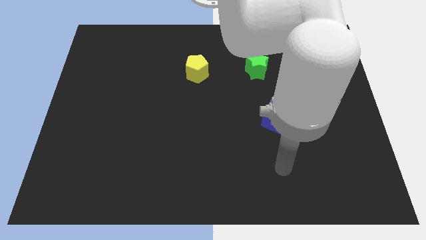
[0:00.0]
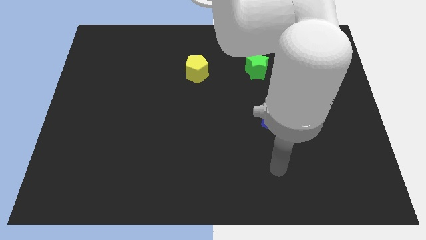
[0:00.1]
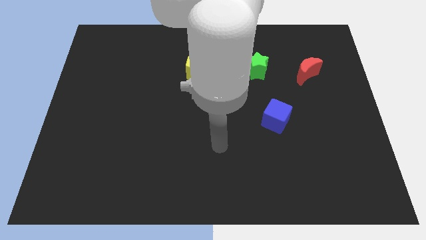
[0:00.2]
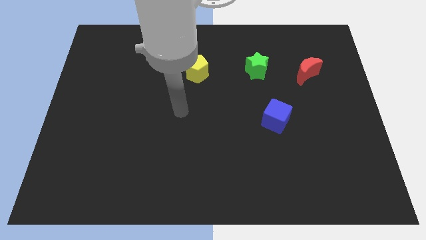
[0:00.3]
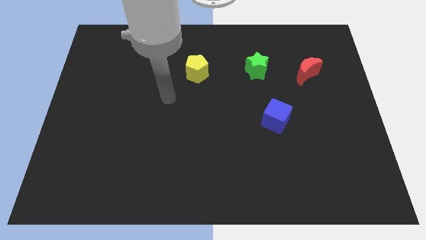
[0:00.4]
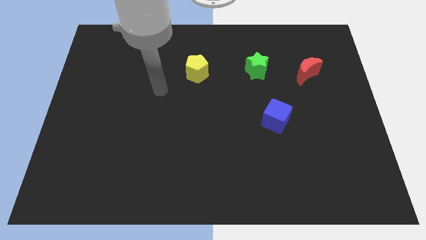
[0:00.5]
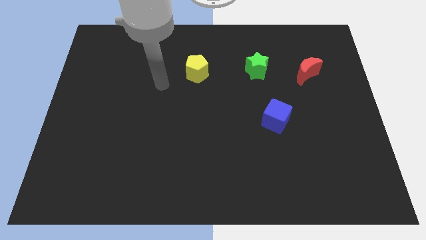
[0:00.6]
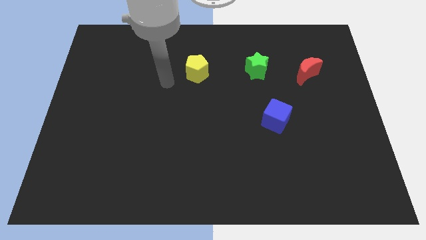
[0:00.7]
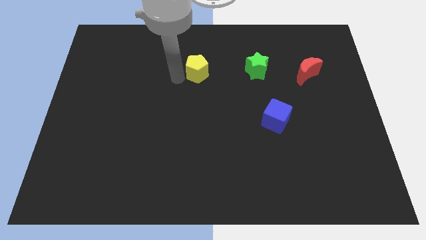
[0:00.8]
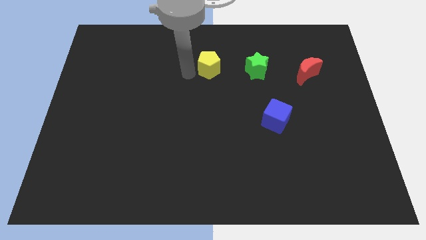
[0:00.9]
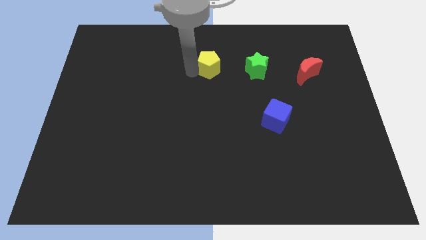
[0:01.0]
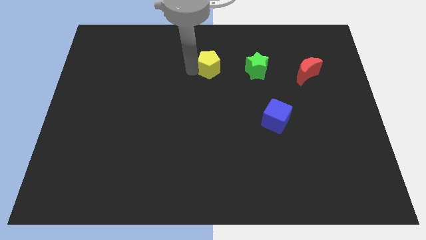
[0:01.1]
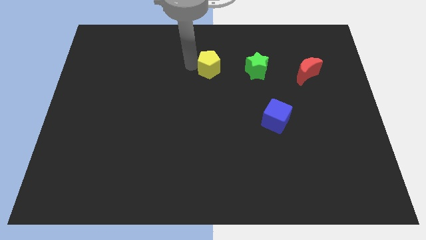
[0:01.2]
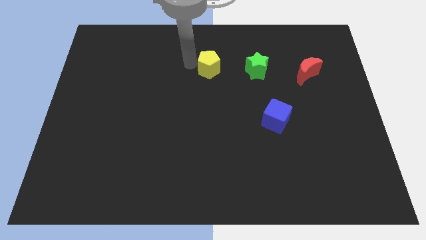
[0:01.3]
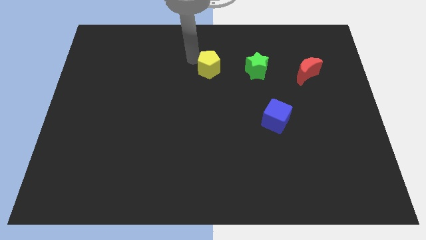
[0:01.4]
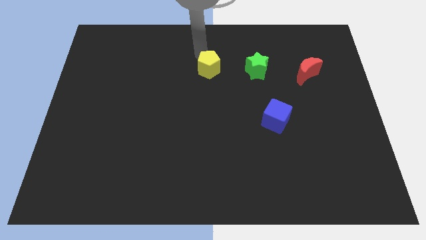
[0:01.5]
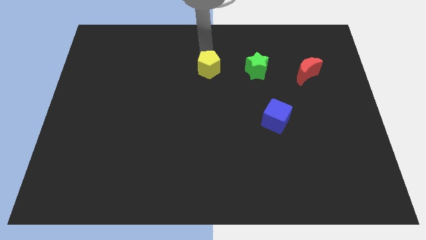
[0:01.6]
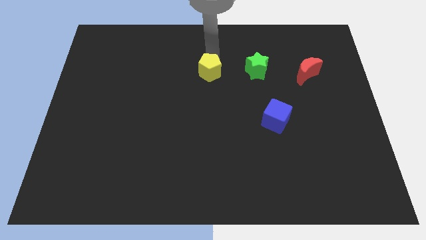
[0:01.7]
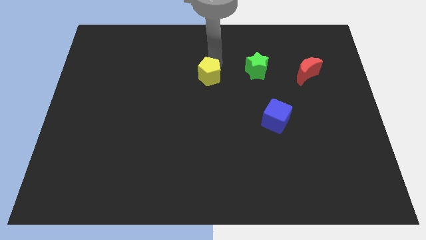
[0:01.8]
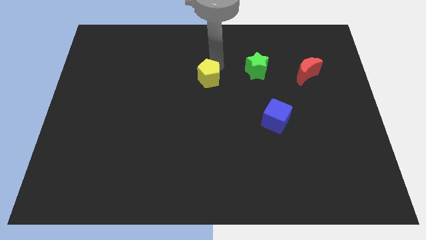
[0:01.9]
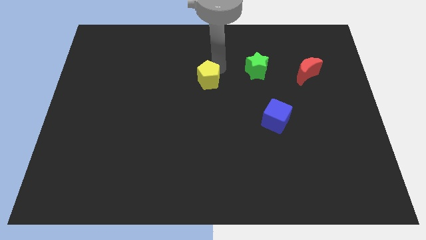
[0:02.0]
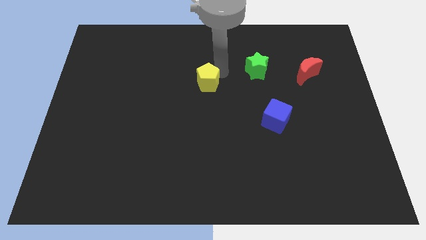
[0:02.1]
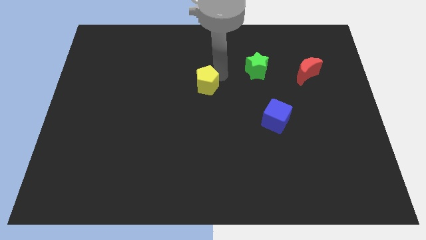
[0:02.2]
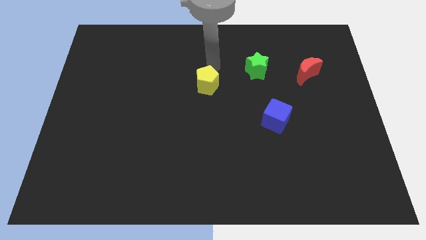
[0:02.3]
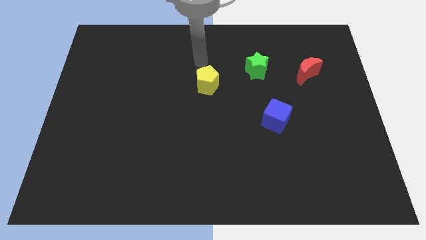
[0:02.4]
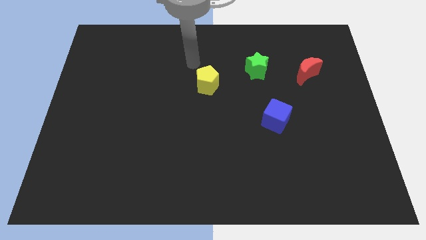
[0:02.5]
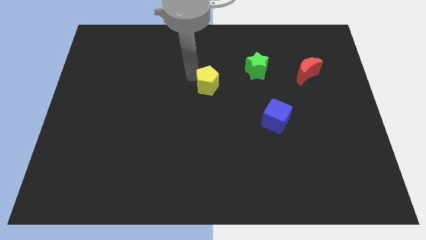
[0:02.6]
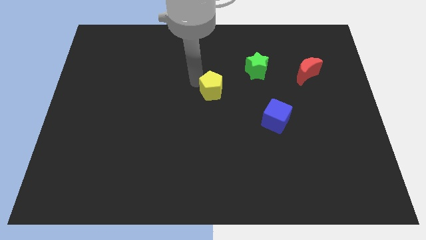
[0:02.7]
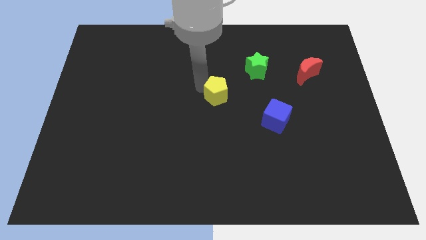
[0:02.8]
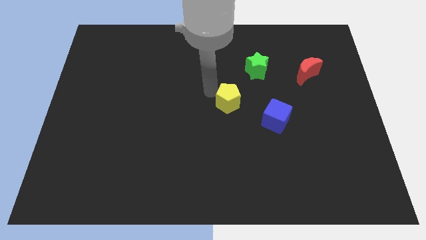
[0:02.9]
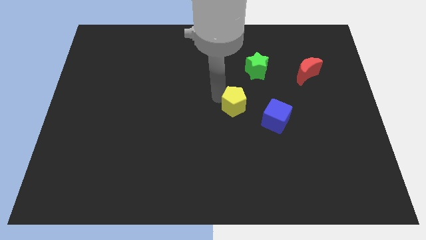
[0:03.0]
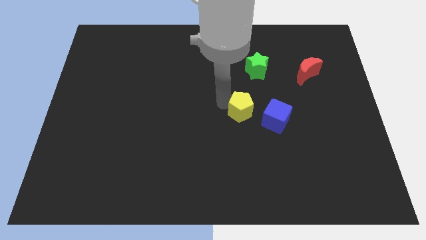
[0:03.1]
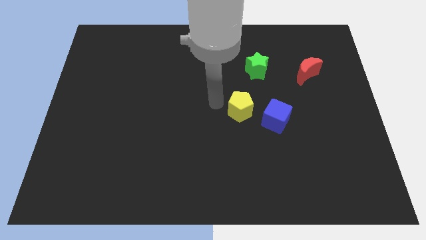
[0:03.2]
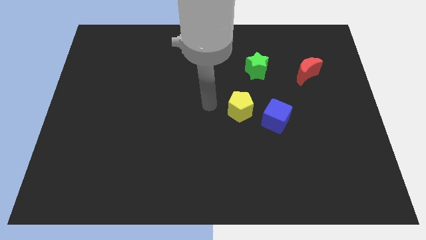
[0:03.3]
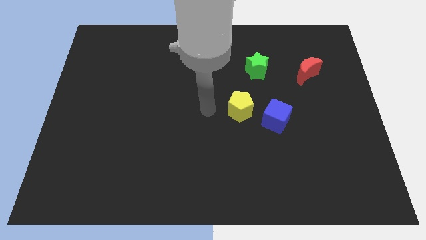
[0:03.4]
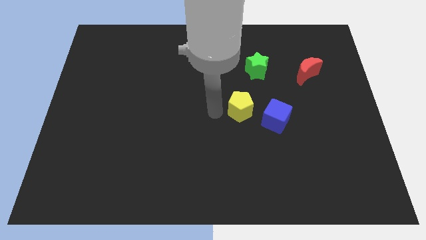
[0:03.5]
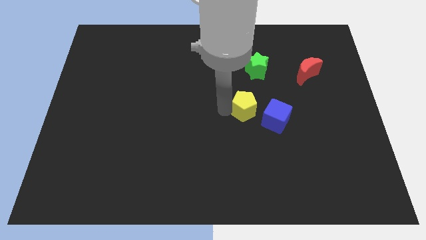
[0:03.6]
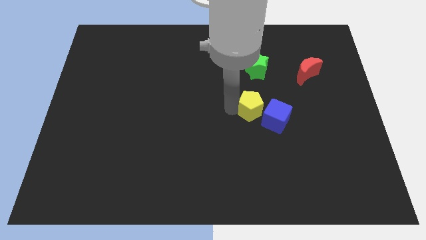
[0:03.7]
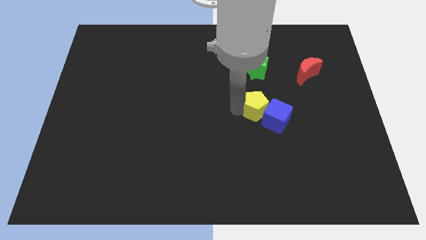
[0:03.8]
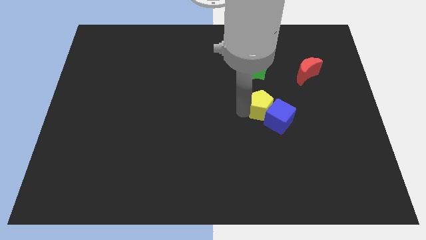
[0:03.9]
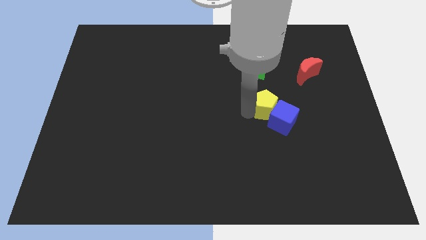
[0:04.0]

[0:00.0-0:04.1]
push the yellow pentagon towards the cube

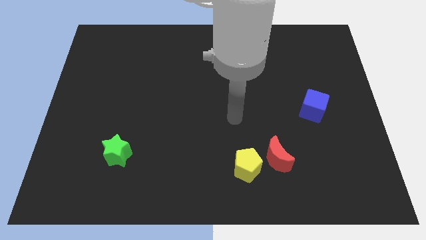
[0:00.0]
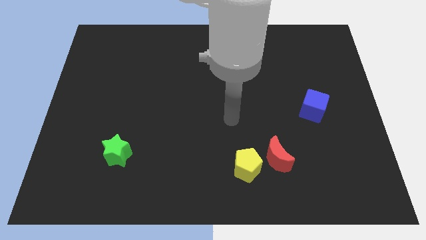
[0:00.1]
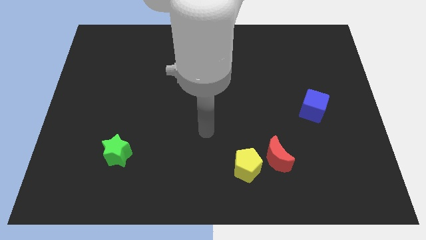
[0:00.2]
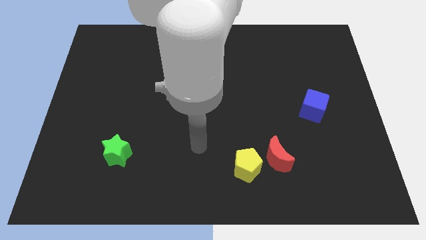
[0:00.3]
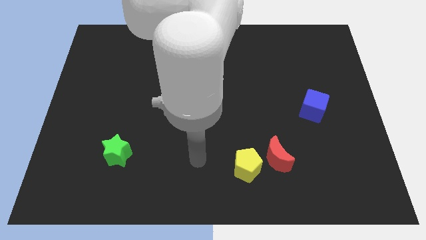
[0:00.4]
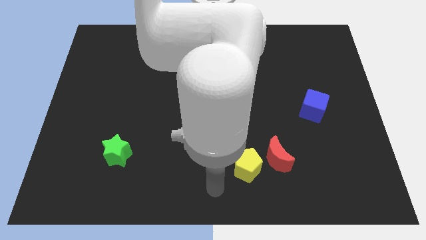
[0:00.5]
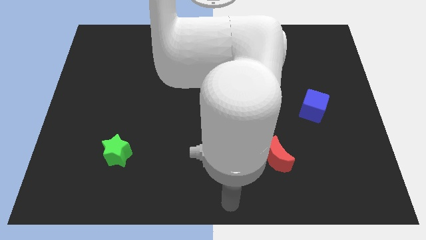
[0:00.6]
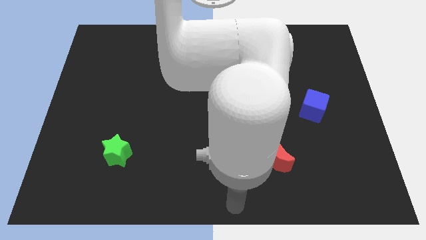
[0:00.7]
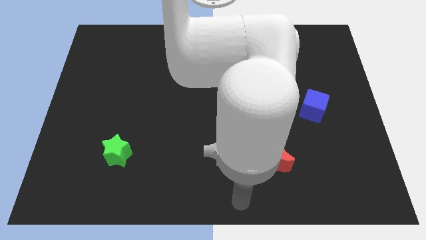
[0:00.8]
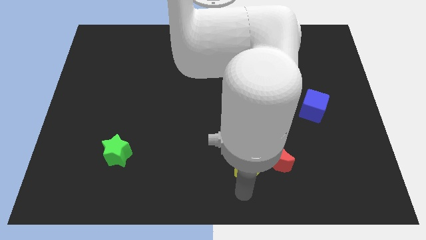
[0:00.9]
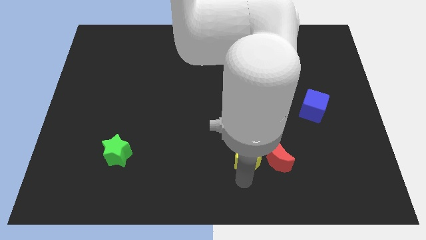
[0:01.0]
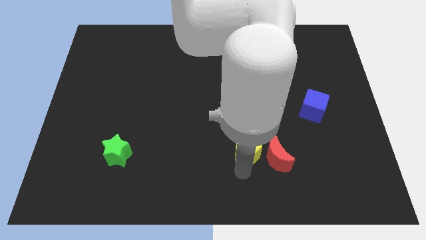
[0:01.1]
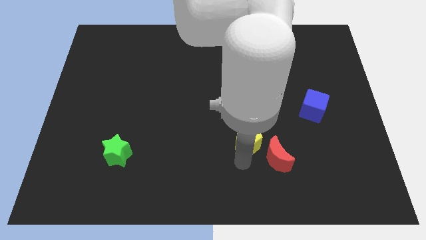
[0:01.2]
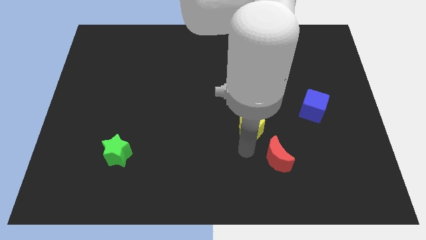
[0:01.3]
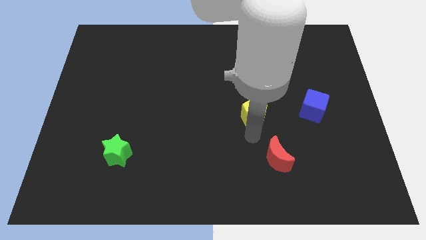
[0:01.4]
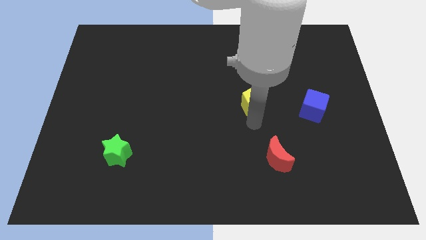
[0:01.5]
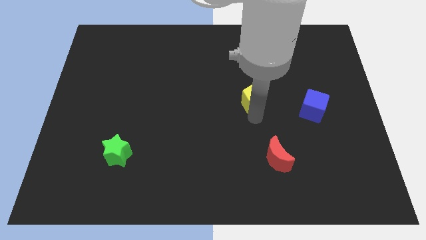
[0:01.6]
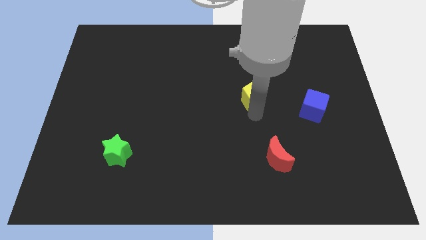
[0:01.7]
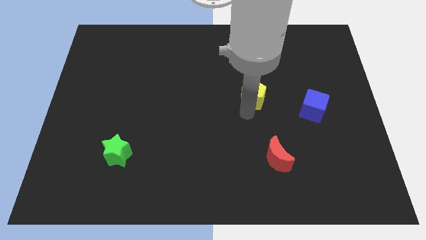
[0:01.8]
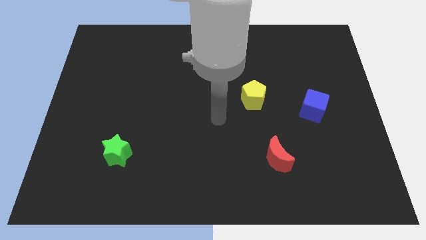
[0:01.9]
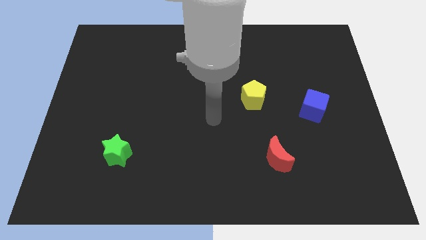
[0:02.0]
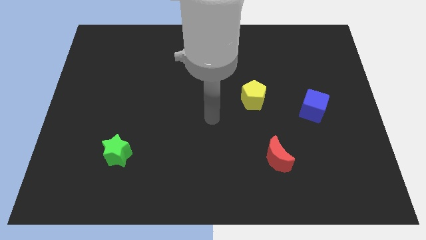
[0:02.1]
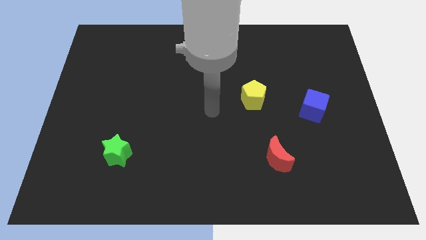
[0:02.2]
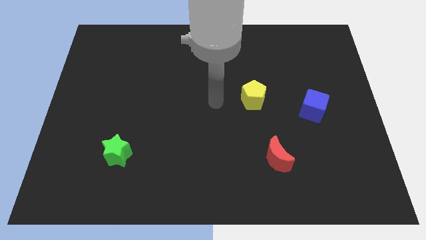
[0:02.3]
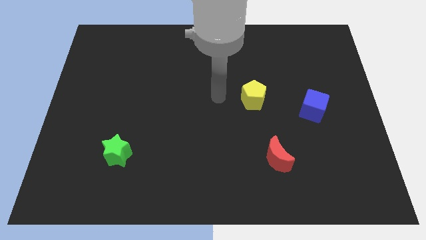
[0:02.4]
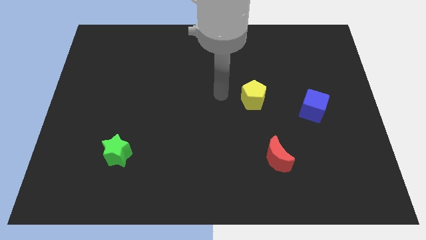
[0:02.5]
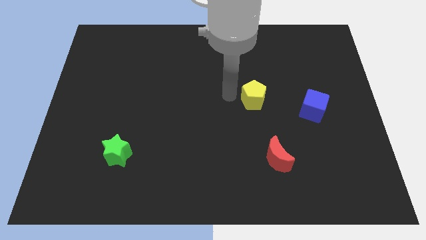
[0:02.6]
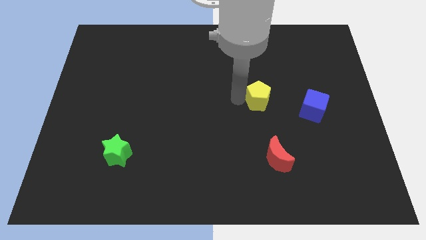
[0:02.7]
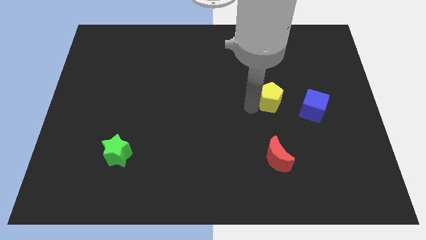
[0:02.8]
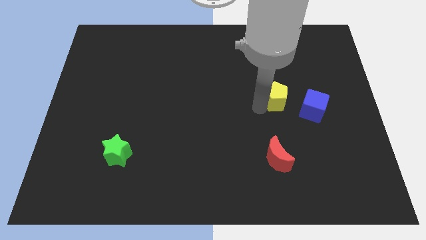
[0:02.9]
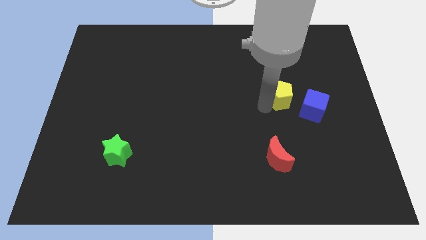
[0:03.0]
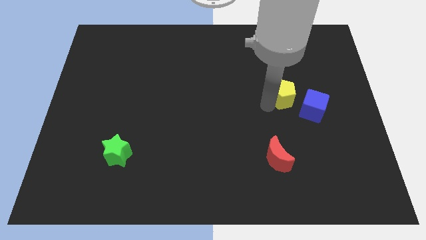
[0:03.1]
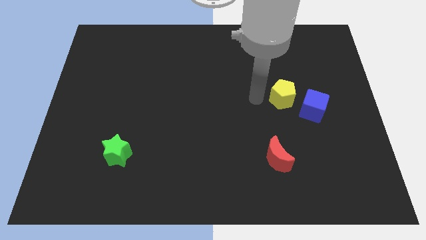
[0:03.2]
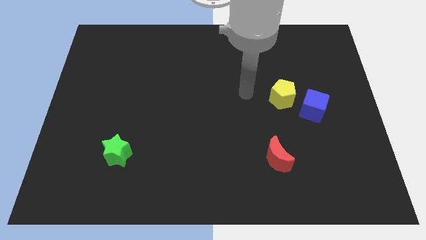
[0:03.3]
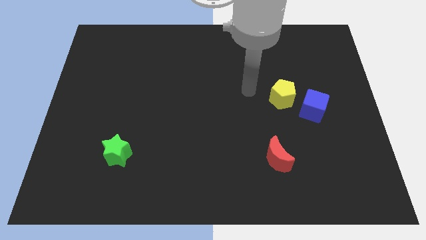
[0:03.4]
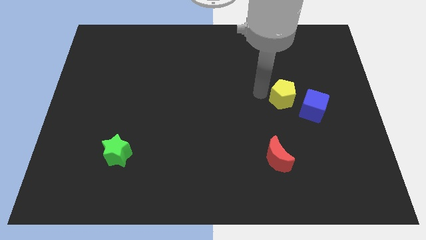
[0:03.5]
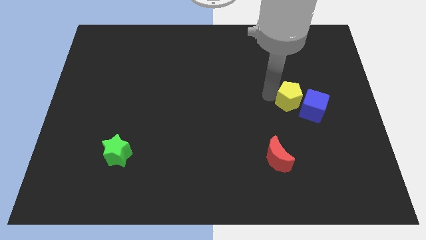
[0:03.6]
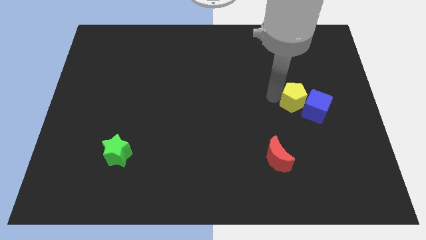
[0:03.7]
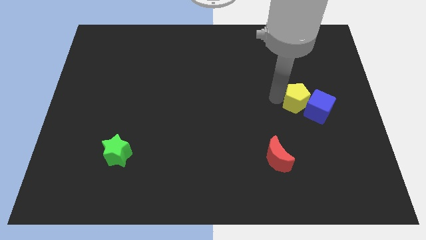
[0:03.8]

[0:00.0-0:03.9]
move the pentagon close to the blue block

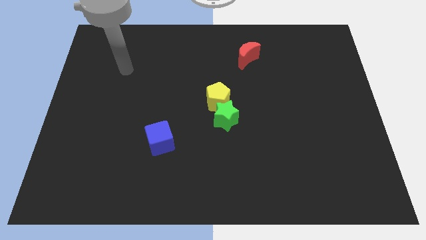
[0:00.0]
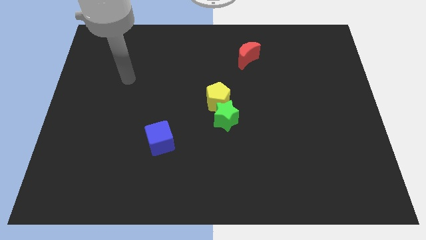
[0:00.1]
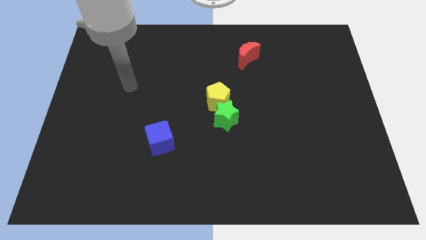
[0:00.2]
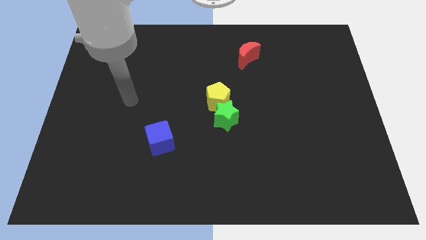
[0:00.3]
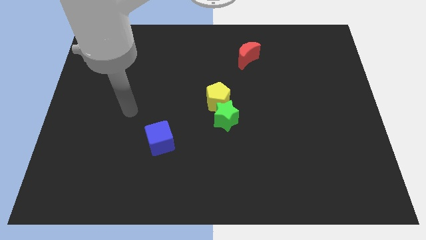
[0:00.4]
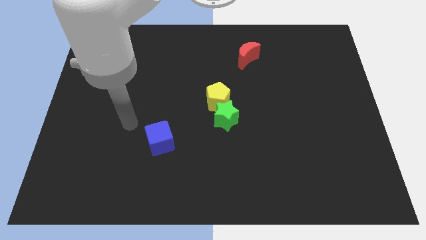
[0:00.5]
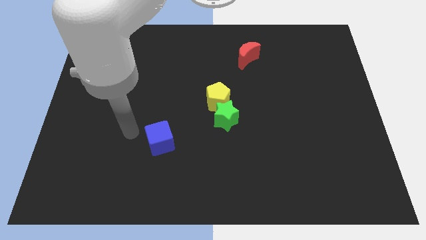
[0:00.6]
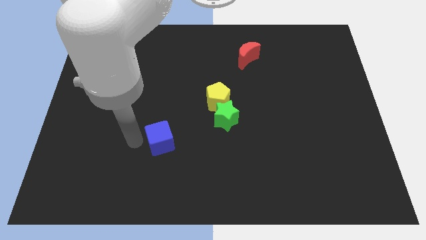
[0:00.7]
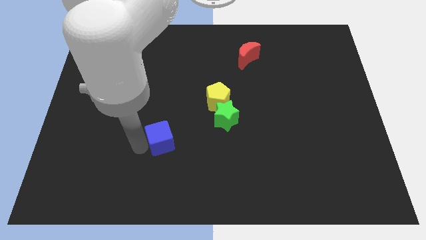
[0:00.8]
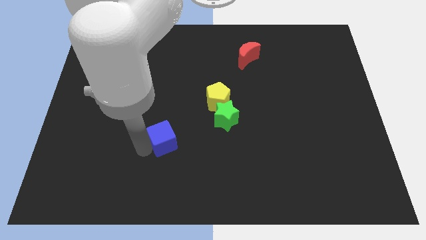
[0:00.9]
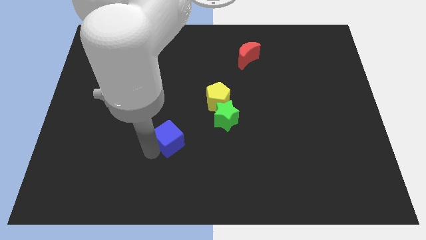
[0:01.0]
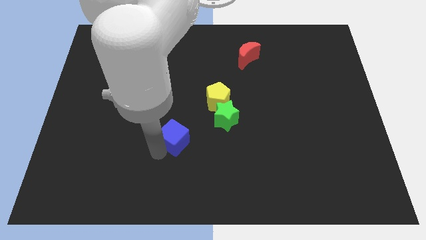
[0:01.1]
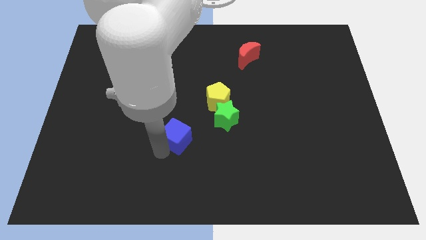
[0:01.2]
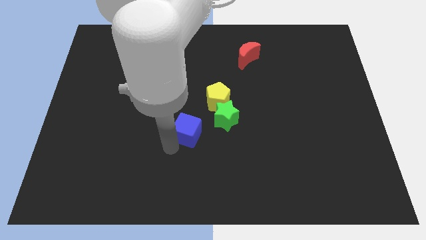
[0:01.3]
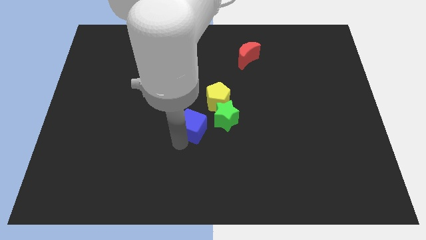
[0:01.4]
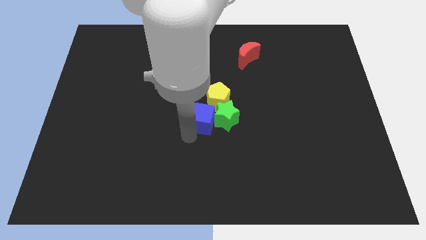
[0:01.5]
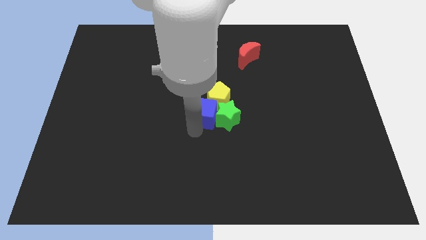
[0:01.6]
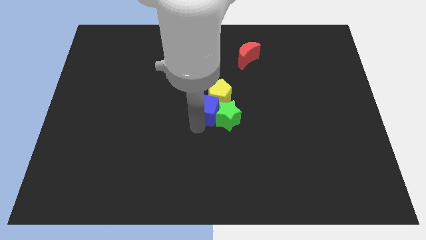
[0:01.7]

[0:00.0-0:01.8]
push the blue block next to the green block
